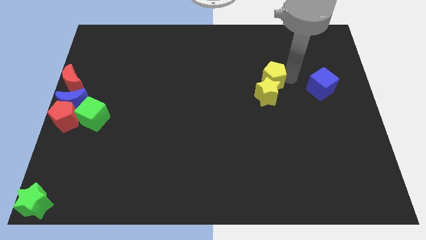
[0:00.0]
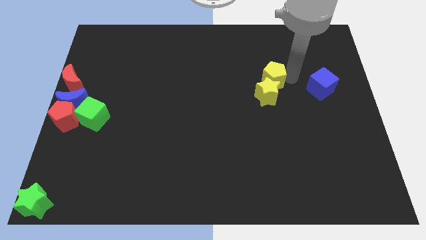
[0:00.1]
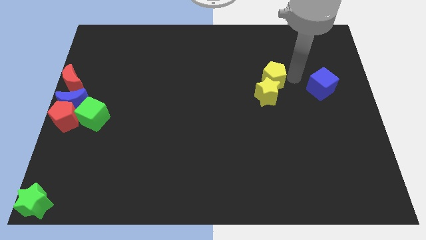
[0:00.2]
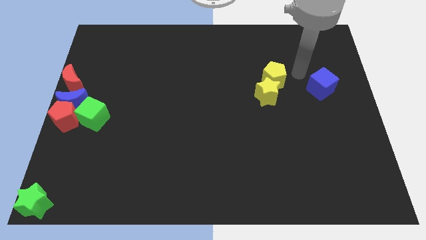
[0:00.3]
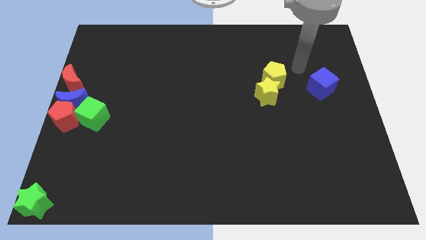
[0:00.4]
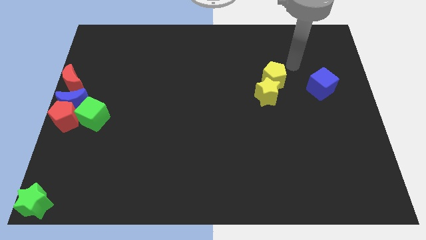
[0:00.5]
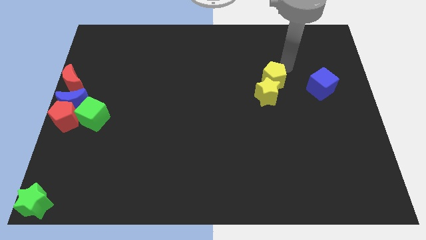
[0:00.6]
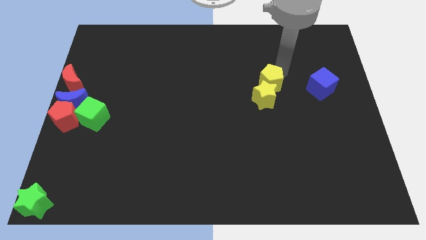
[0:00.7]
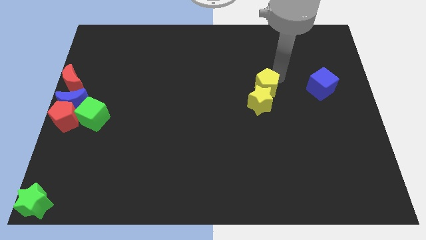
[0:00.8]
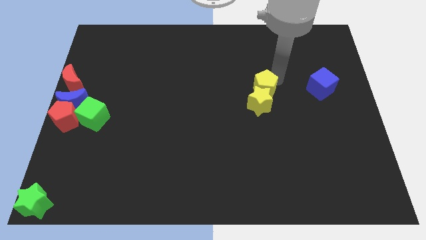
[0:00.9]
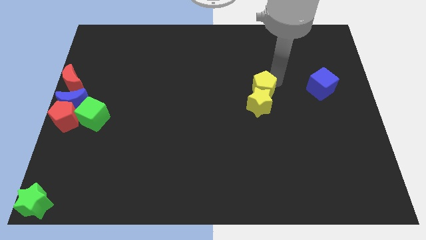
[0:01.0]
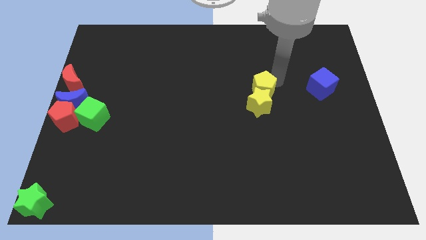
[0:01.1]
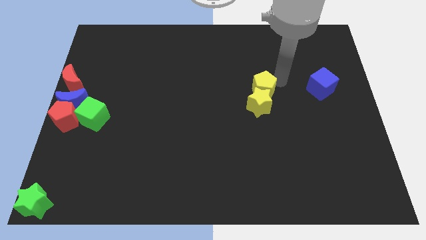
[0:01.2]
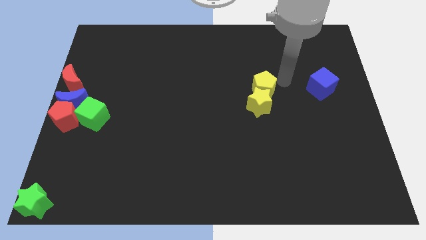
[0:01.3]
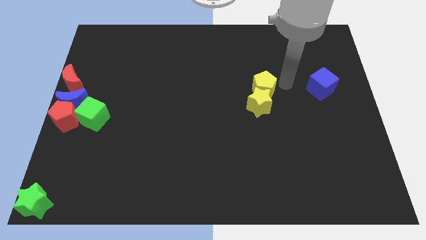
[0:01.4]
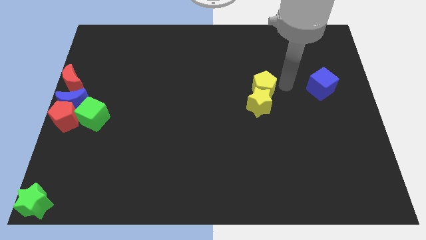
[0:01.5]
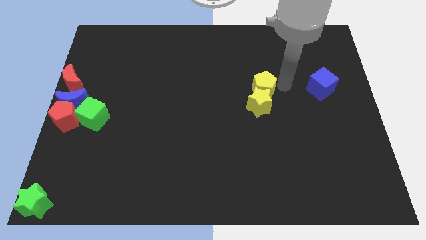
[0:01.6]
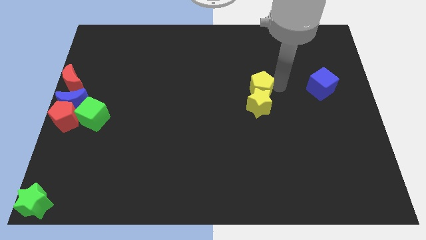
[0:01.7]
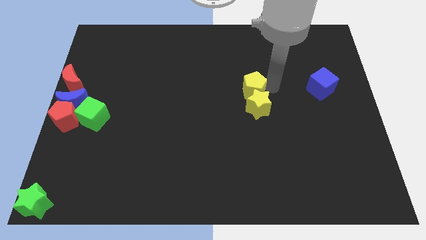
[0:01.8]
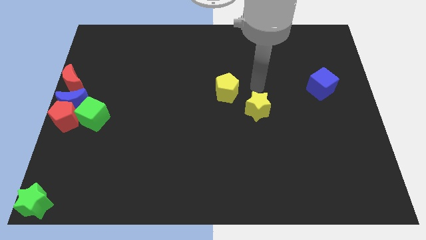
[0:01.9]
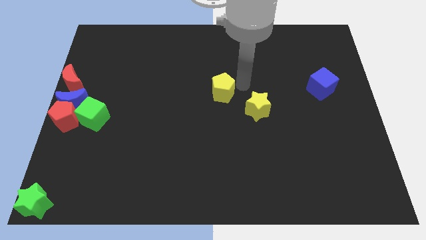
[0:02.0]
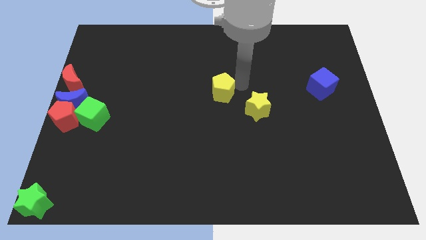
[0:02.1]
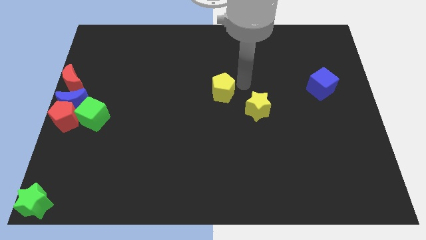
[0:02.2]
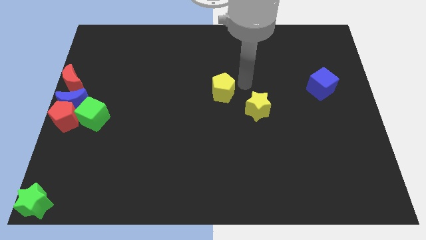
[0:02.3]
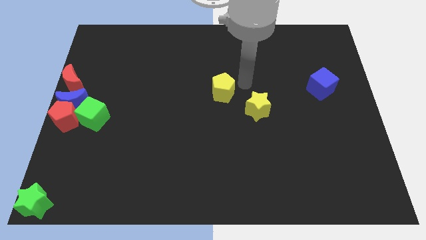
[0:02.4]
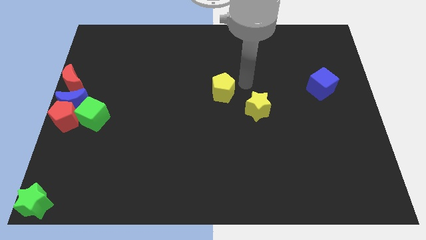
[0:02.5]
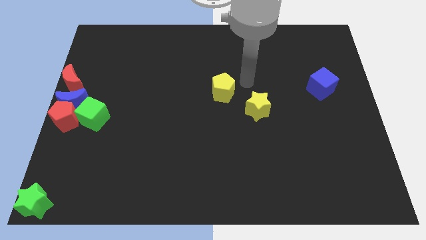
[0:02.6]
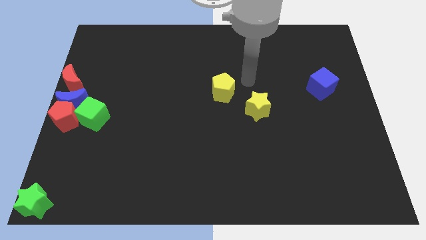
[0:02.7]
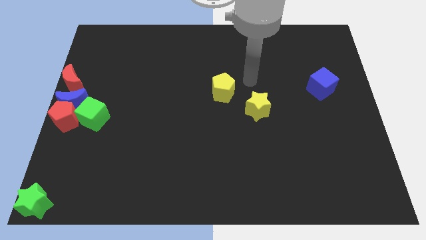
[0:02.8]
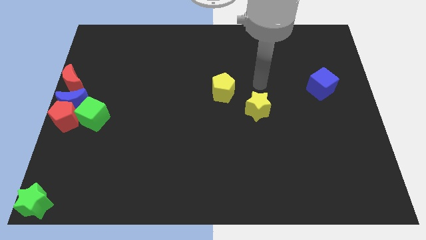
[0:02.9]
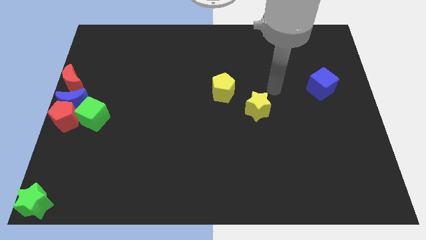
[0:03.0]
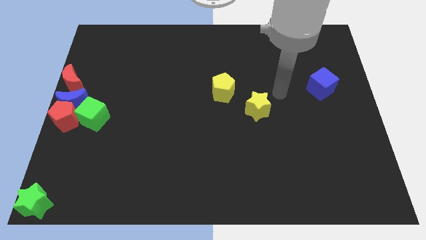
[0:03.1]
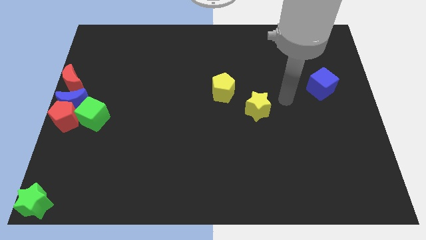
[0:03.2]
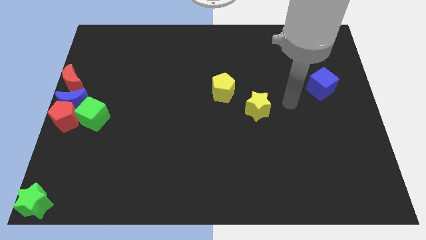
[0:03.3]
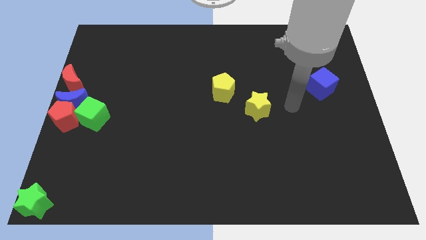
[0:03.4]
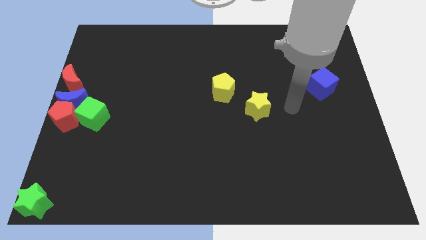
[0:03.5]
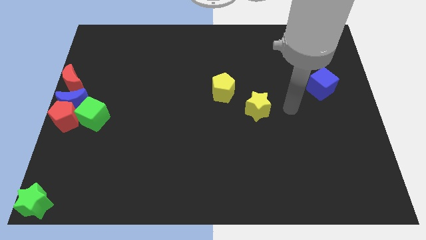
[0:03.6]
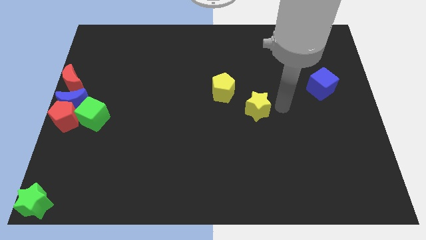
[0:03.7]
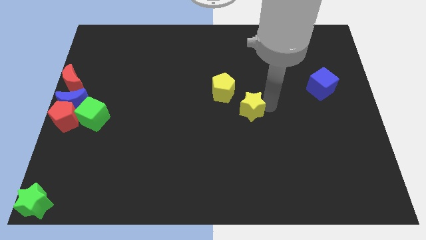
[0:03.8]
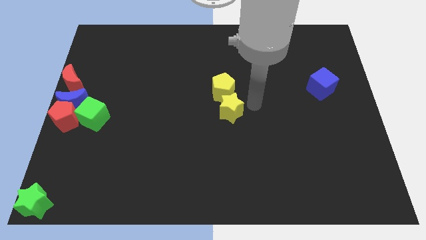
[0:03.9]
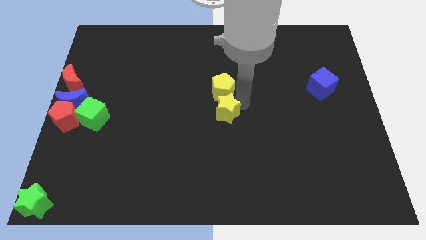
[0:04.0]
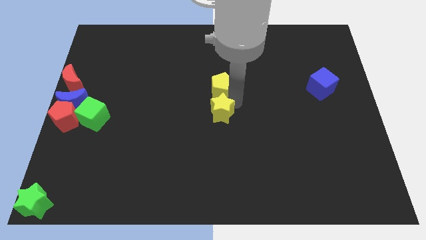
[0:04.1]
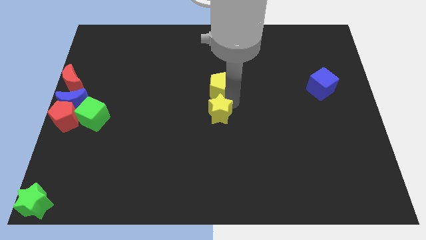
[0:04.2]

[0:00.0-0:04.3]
move the yellow blocks to the center of the board

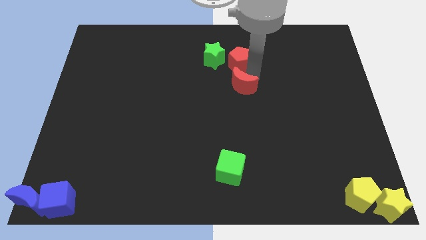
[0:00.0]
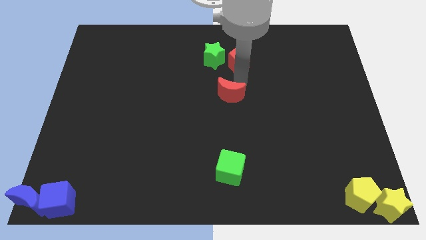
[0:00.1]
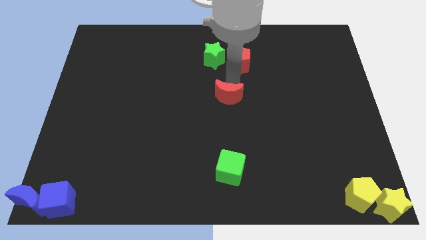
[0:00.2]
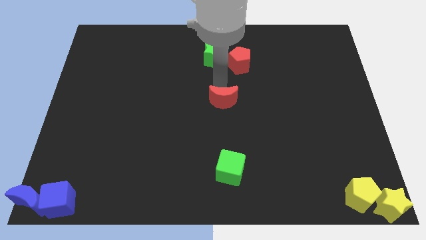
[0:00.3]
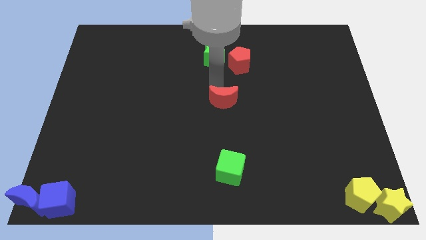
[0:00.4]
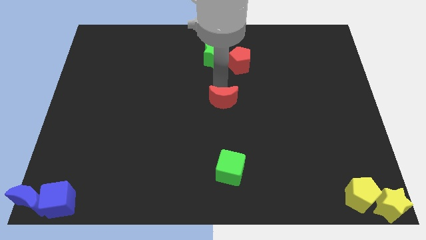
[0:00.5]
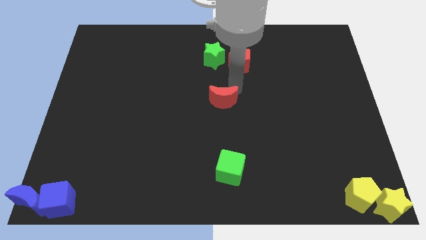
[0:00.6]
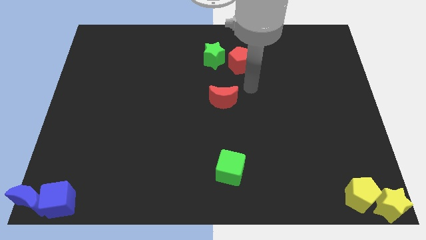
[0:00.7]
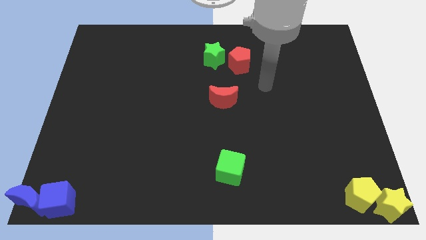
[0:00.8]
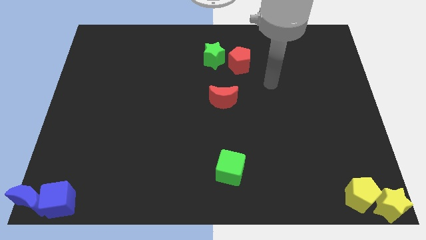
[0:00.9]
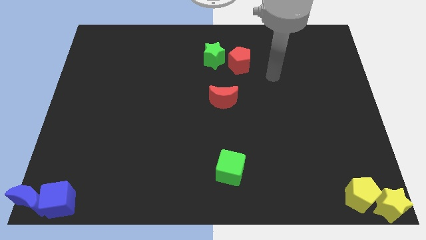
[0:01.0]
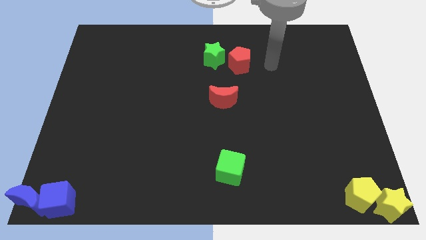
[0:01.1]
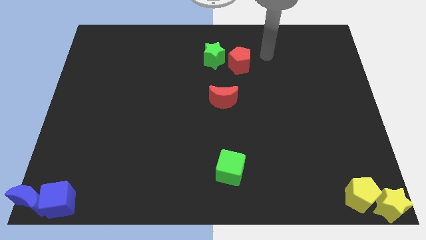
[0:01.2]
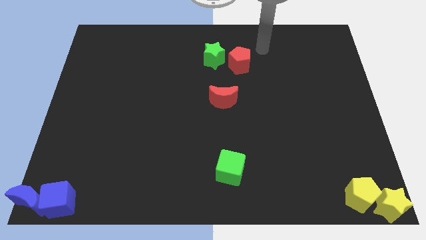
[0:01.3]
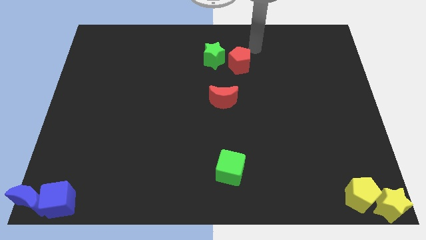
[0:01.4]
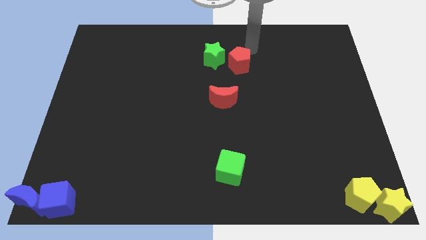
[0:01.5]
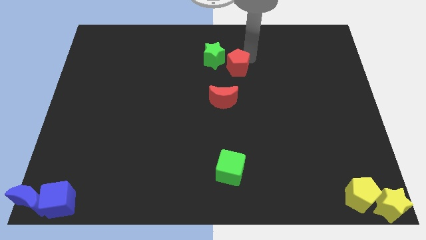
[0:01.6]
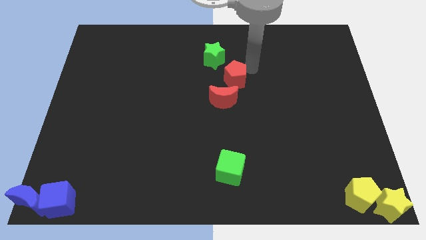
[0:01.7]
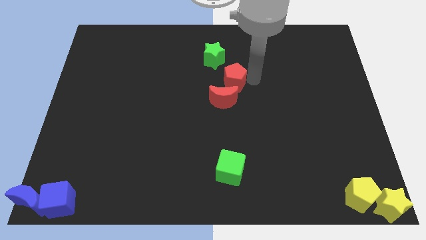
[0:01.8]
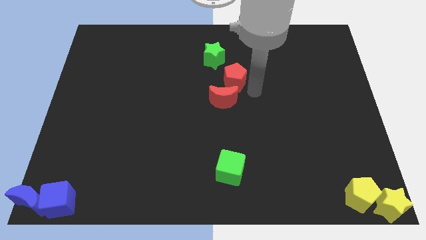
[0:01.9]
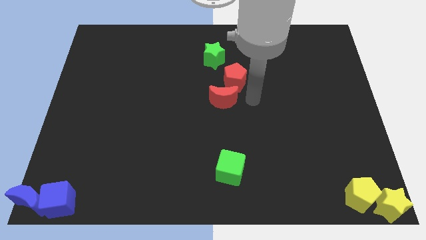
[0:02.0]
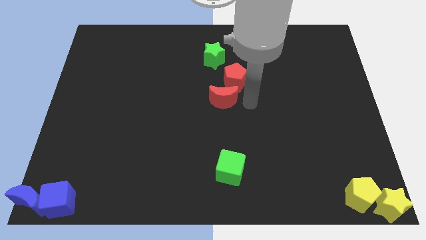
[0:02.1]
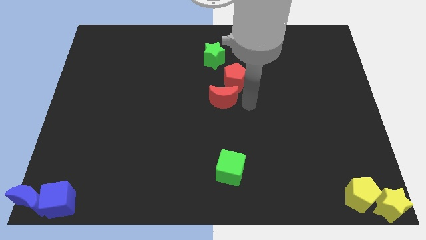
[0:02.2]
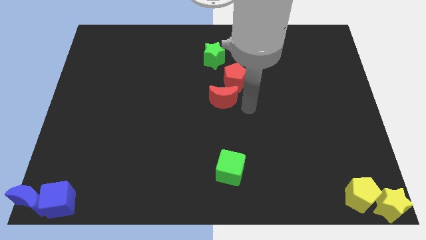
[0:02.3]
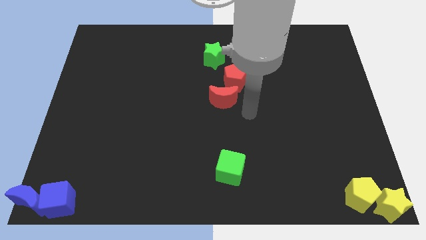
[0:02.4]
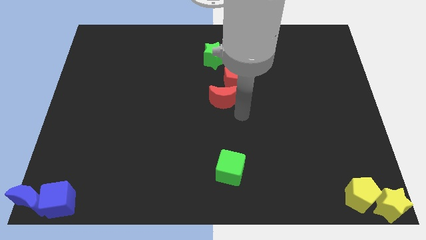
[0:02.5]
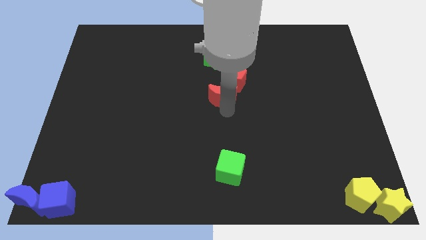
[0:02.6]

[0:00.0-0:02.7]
push the red pentagon into the red moon

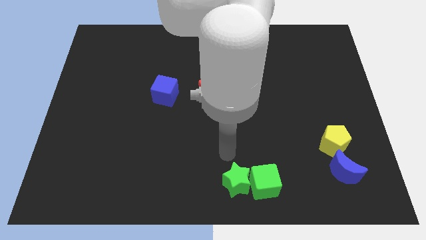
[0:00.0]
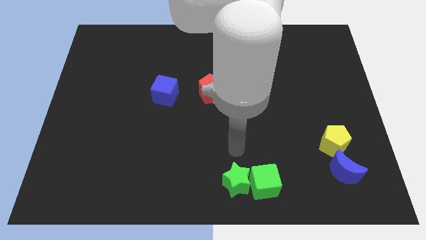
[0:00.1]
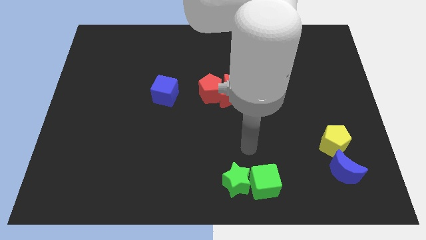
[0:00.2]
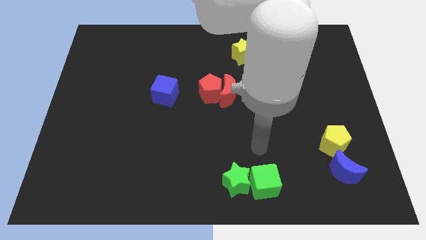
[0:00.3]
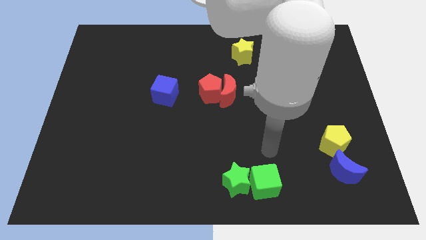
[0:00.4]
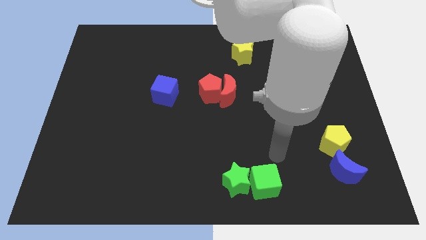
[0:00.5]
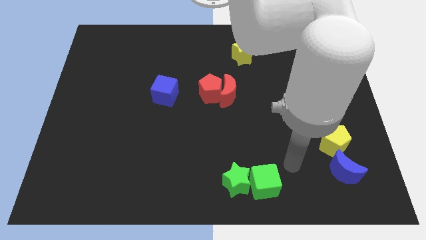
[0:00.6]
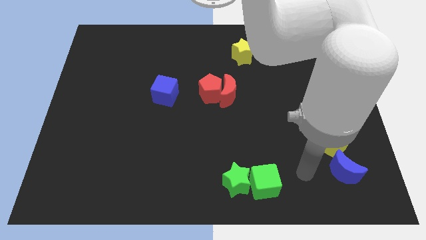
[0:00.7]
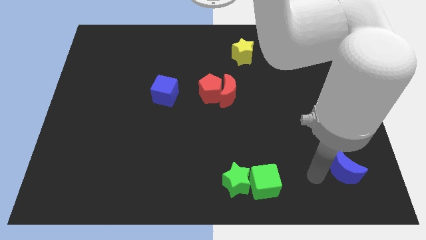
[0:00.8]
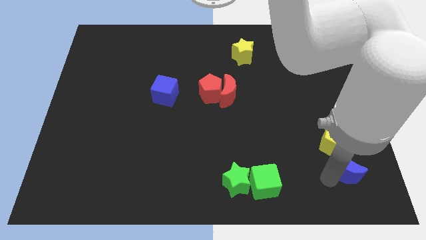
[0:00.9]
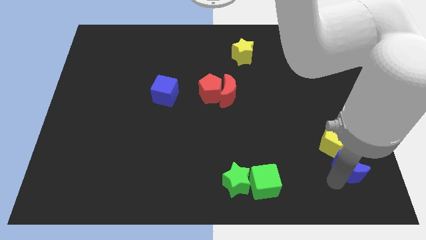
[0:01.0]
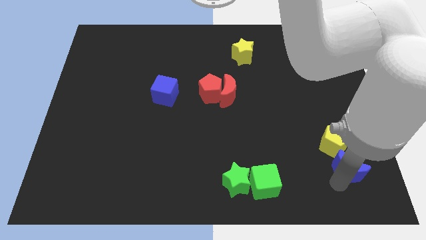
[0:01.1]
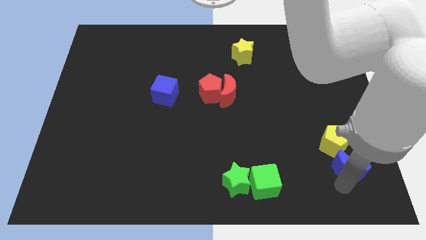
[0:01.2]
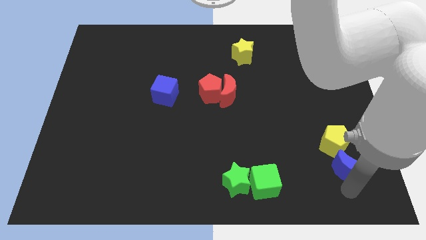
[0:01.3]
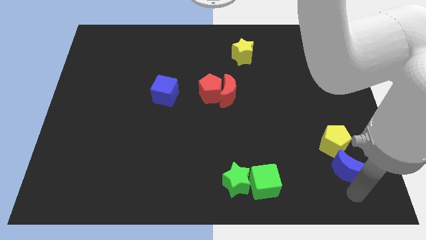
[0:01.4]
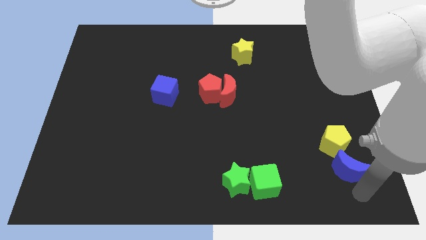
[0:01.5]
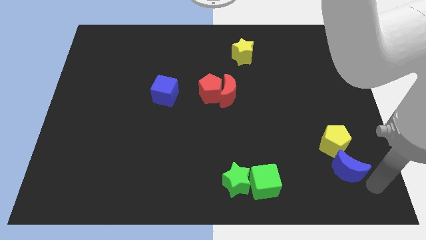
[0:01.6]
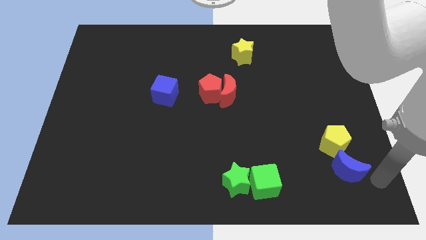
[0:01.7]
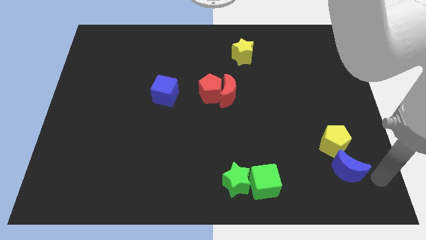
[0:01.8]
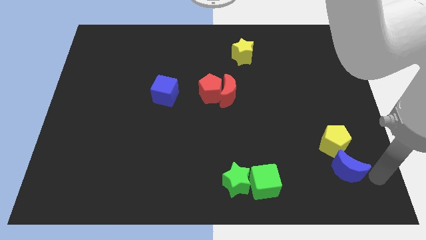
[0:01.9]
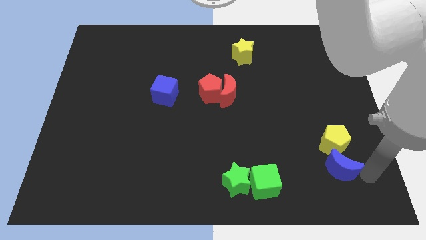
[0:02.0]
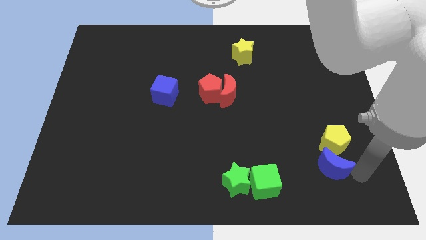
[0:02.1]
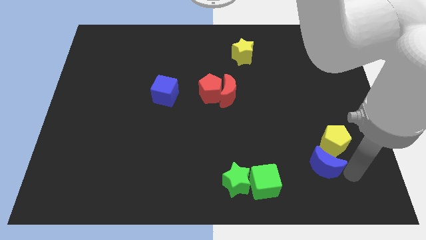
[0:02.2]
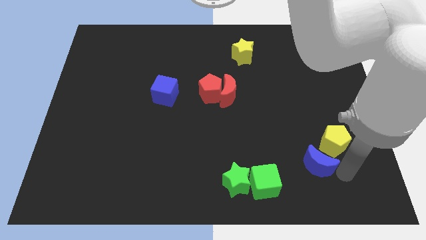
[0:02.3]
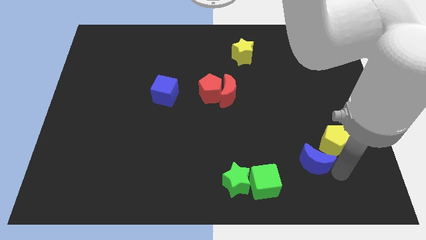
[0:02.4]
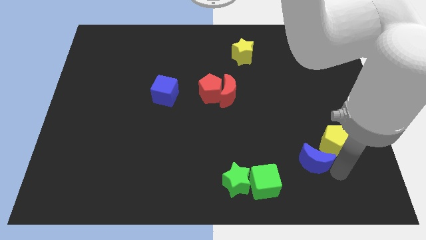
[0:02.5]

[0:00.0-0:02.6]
move the blue moon slightly to the left
